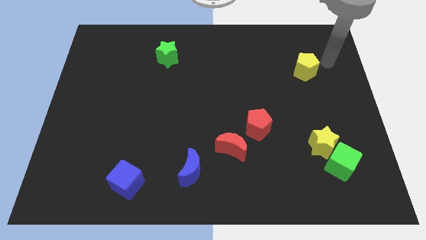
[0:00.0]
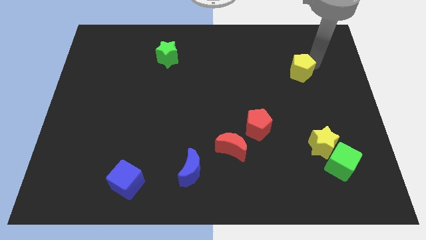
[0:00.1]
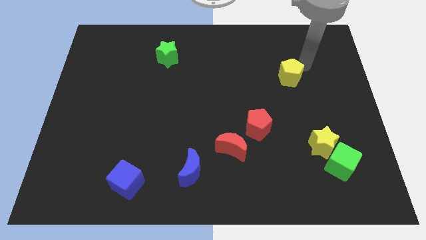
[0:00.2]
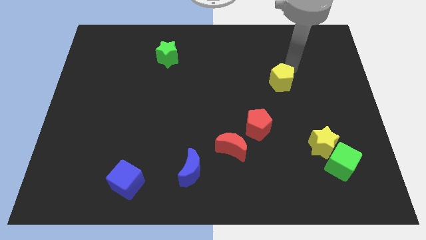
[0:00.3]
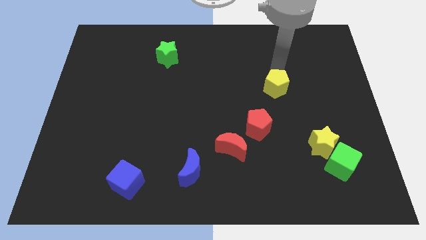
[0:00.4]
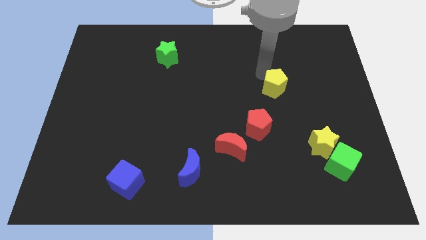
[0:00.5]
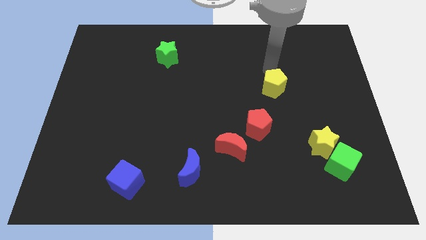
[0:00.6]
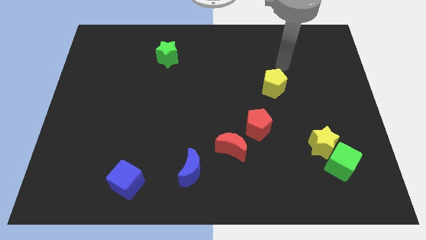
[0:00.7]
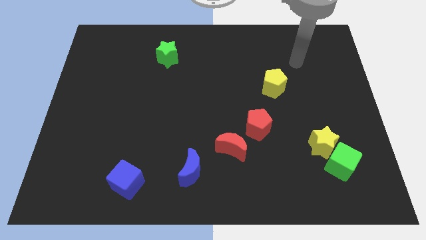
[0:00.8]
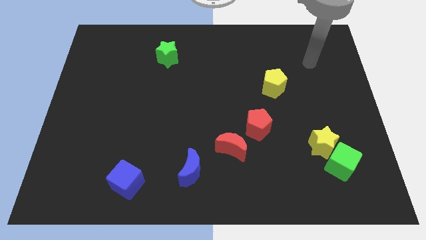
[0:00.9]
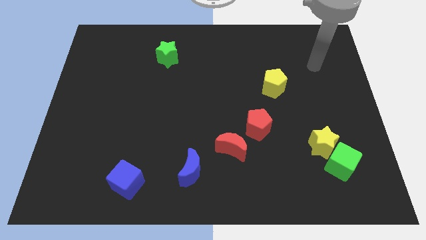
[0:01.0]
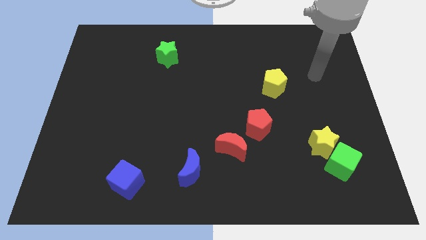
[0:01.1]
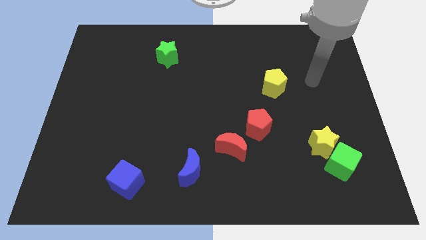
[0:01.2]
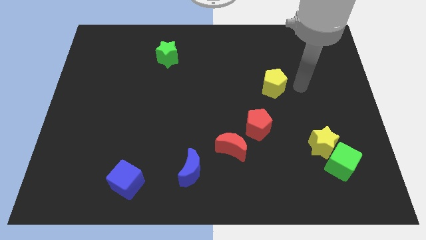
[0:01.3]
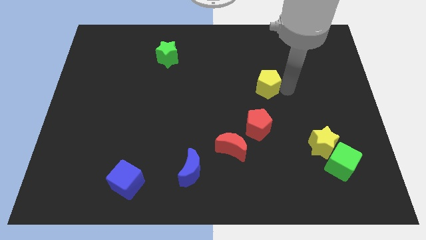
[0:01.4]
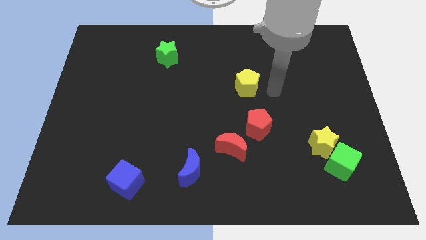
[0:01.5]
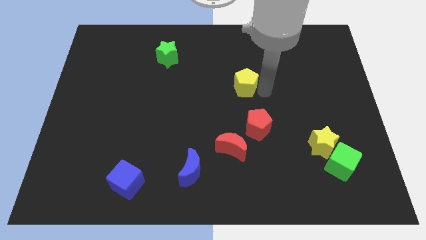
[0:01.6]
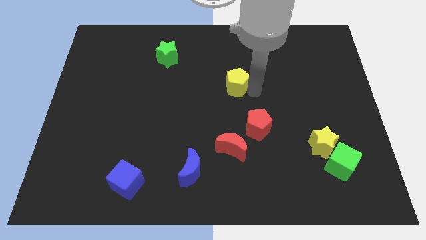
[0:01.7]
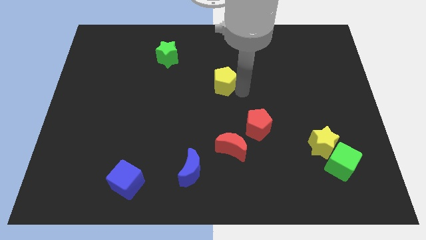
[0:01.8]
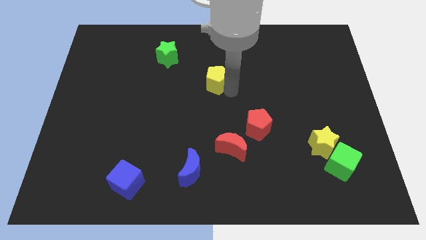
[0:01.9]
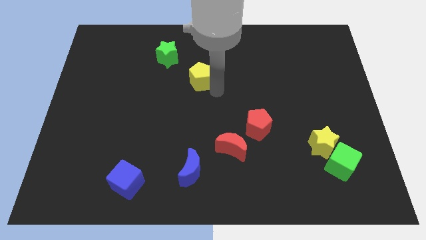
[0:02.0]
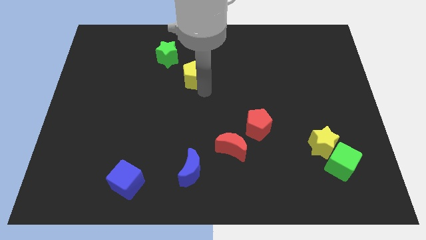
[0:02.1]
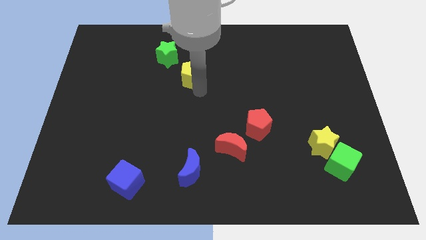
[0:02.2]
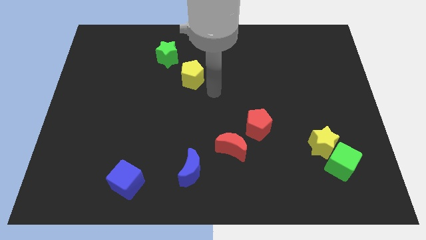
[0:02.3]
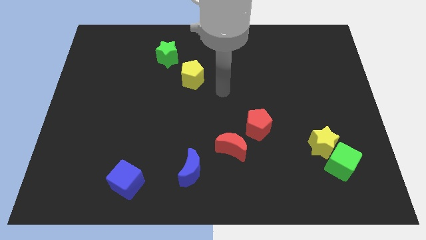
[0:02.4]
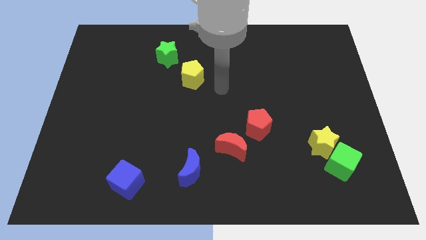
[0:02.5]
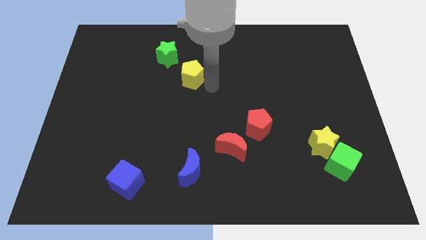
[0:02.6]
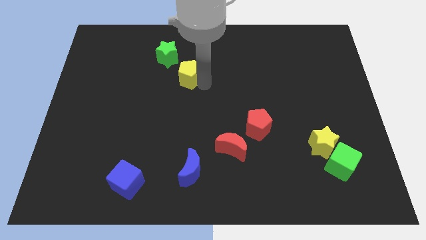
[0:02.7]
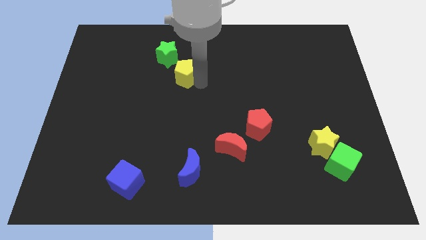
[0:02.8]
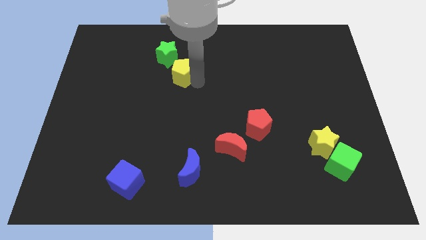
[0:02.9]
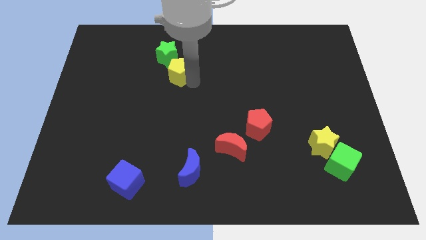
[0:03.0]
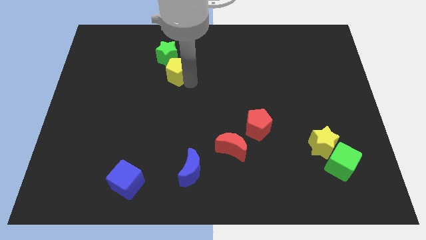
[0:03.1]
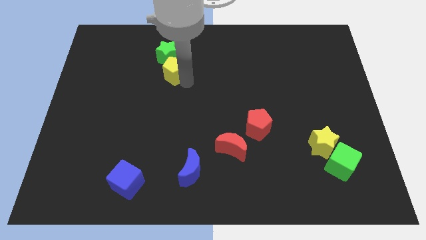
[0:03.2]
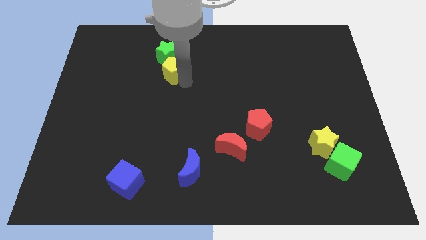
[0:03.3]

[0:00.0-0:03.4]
place the yellow pentagon diagonally below to the green star

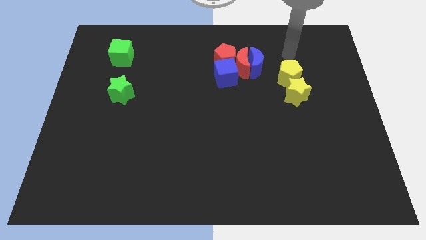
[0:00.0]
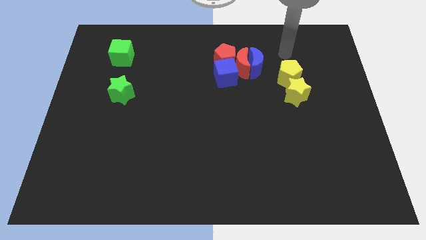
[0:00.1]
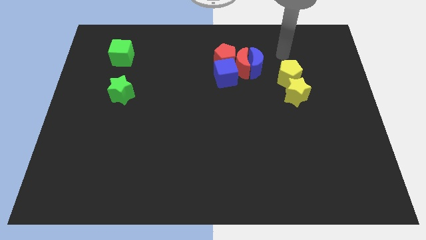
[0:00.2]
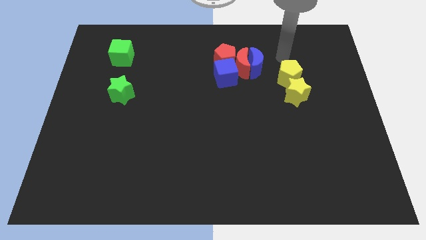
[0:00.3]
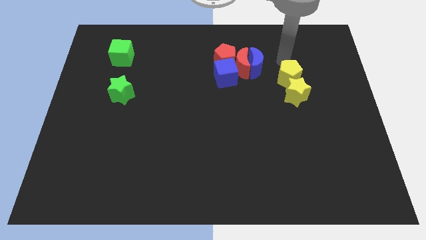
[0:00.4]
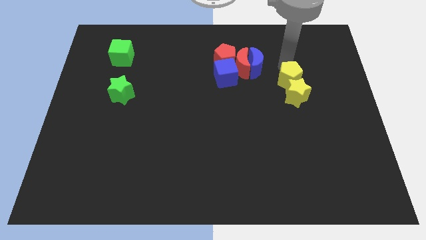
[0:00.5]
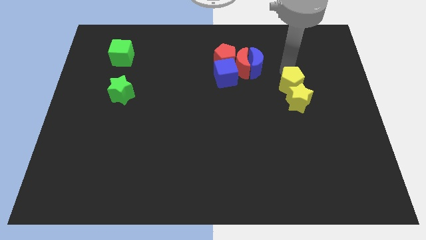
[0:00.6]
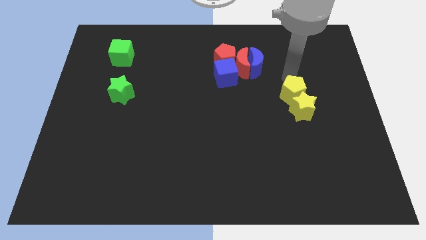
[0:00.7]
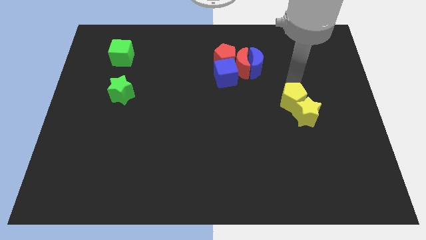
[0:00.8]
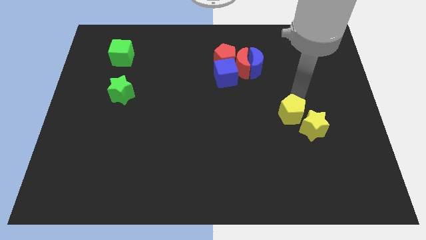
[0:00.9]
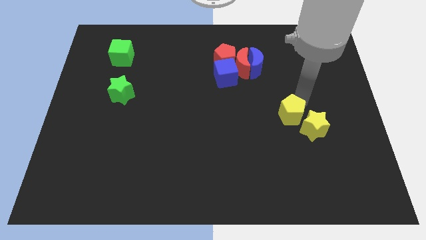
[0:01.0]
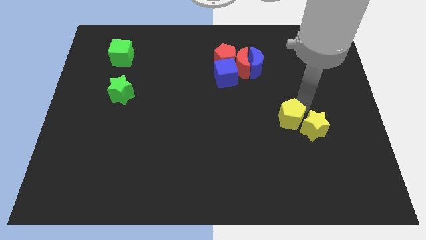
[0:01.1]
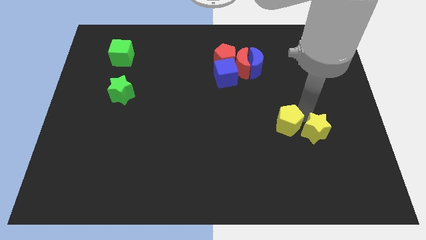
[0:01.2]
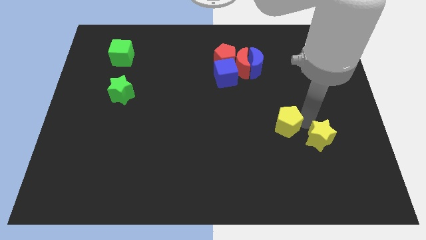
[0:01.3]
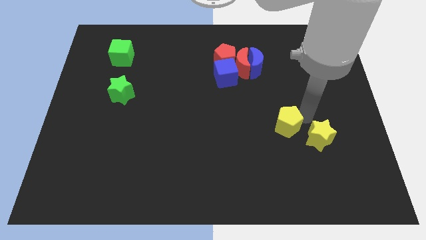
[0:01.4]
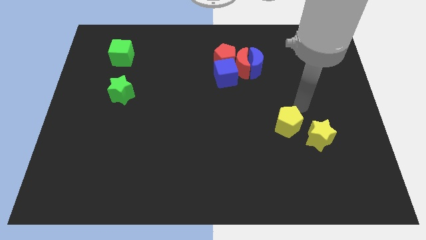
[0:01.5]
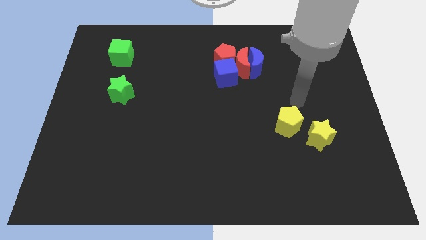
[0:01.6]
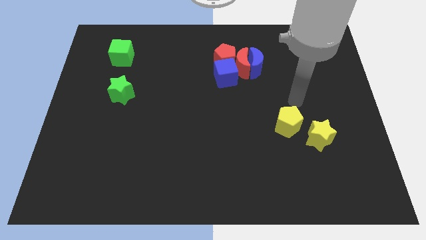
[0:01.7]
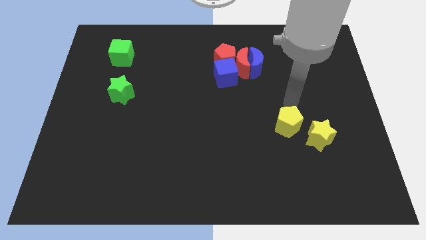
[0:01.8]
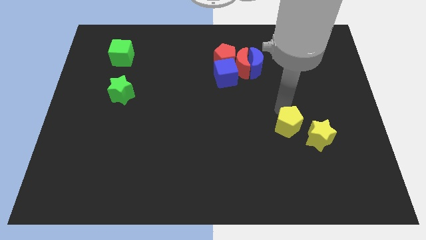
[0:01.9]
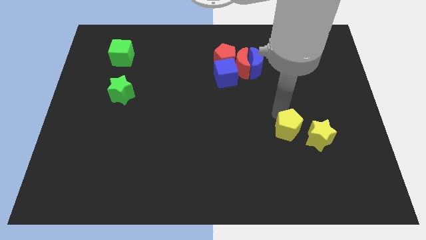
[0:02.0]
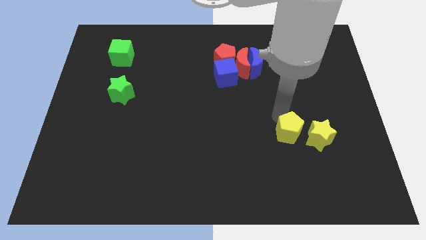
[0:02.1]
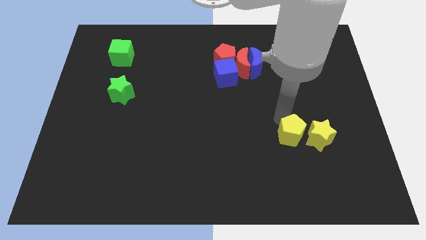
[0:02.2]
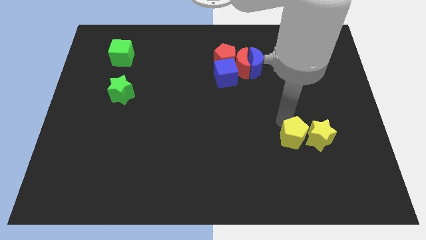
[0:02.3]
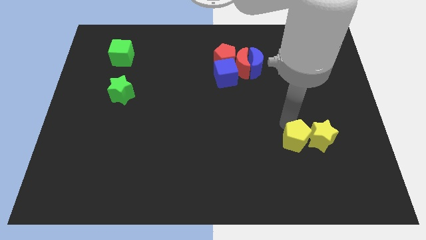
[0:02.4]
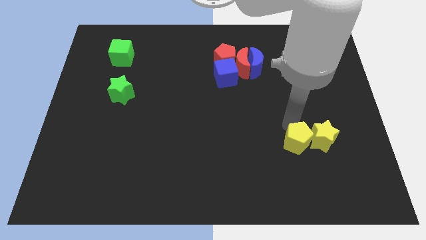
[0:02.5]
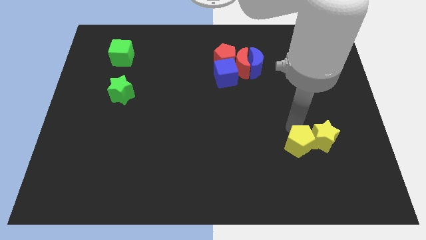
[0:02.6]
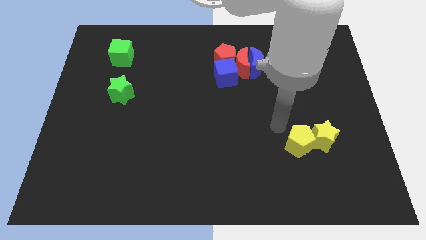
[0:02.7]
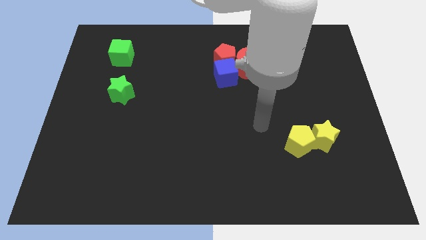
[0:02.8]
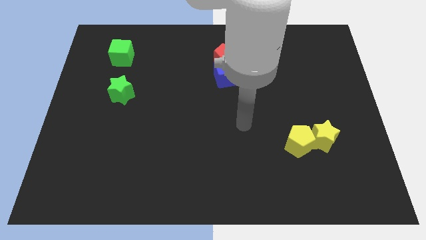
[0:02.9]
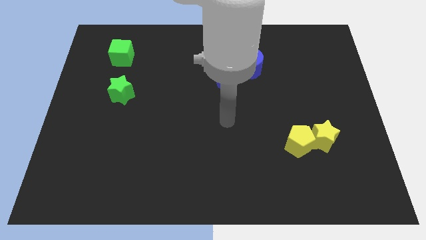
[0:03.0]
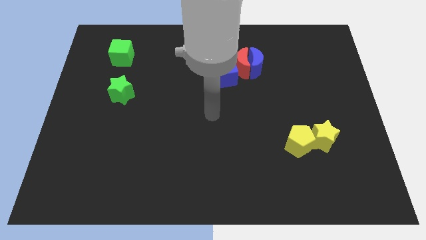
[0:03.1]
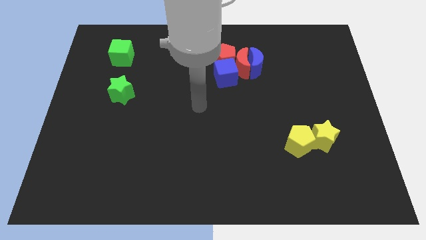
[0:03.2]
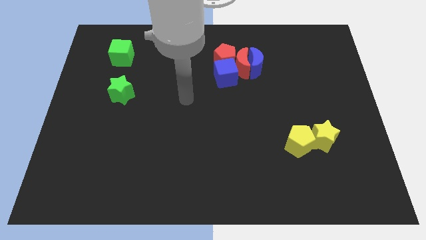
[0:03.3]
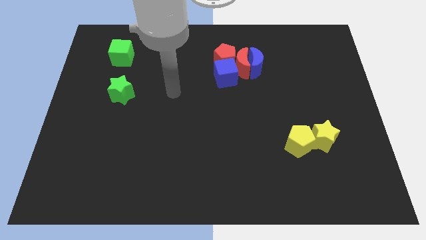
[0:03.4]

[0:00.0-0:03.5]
push both yellow pentagon and yellow star towards the right bottom of the board

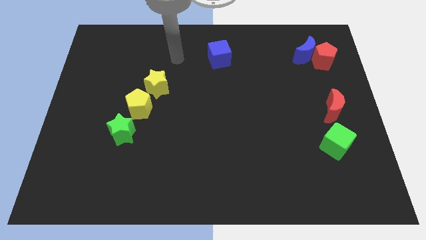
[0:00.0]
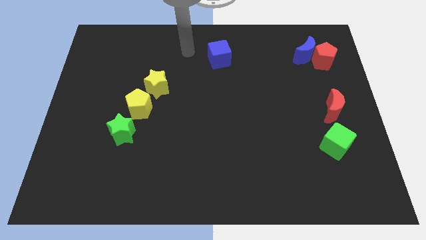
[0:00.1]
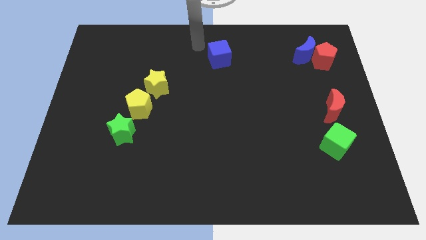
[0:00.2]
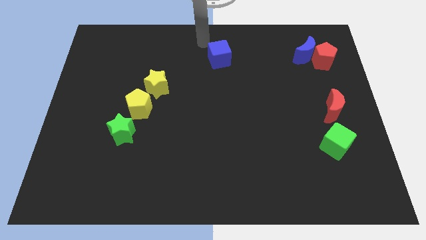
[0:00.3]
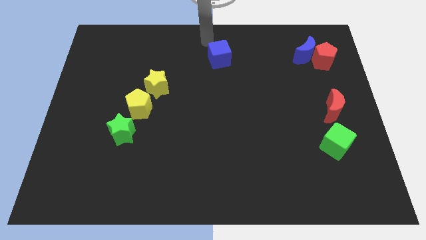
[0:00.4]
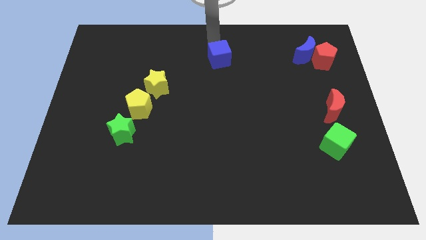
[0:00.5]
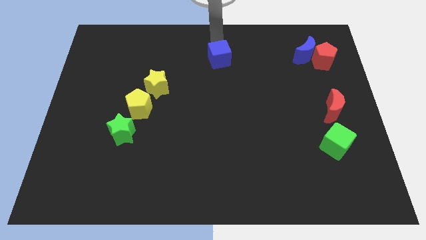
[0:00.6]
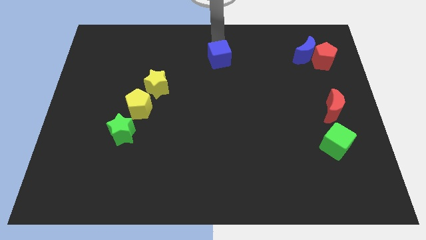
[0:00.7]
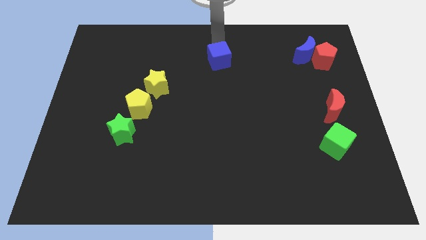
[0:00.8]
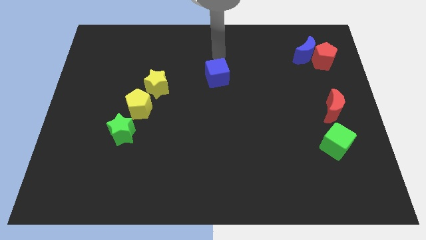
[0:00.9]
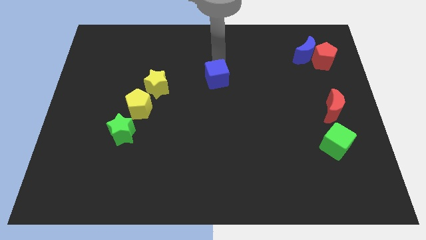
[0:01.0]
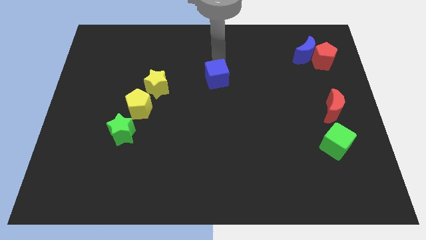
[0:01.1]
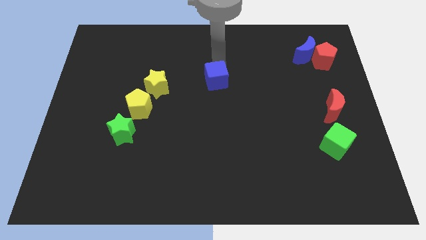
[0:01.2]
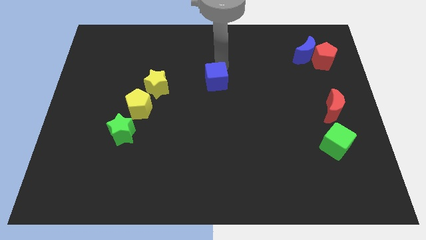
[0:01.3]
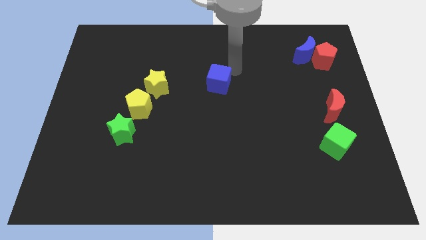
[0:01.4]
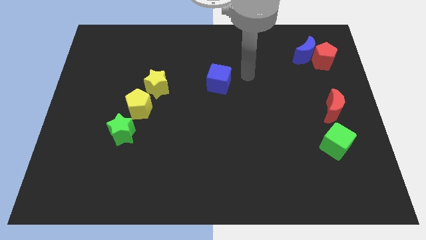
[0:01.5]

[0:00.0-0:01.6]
place the blue block horizontally to right side of the yellow star

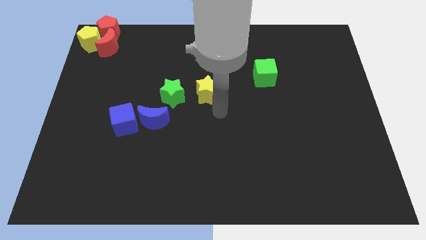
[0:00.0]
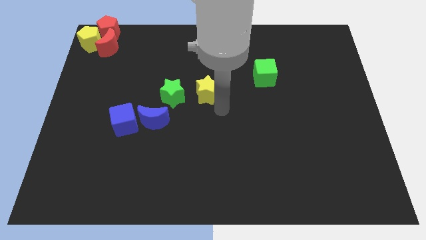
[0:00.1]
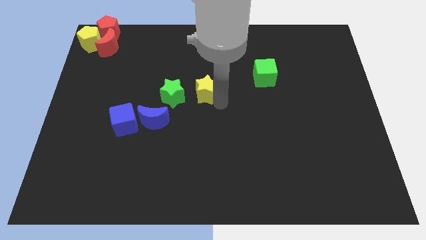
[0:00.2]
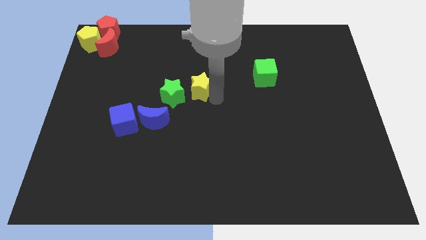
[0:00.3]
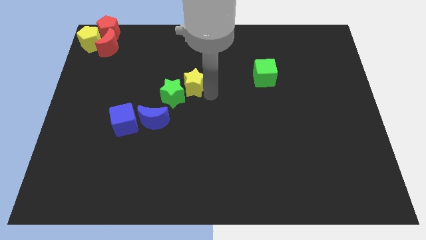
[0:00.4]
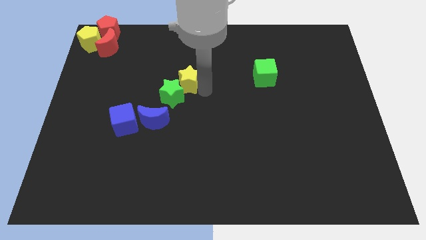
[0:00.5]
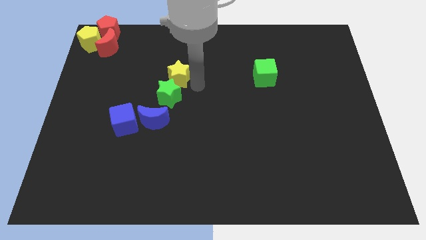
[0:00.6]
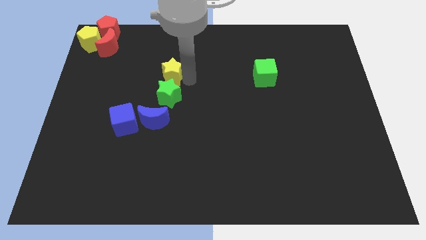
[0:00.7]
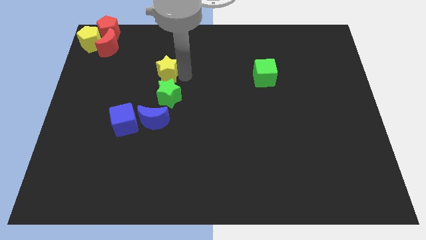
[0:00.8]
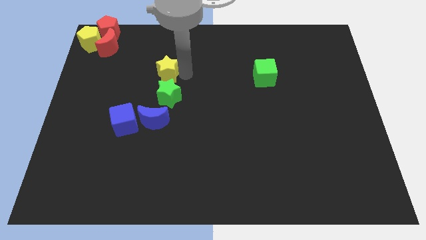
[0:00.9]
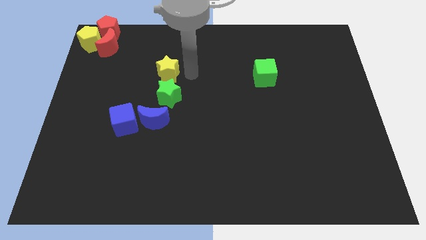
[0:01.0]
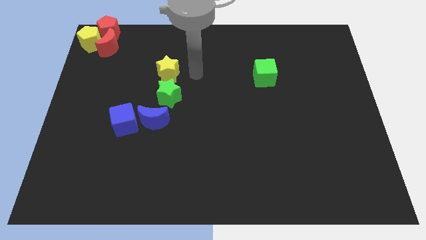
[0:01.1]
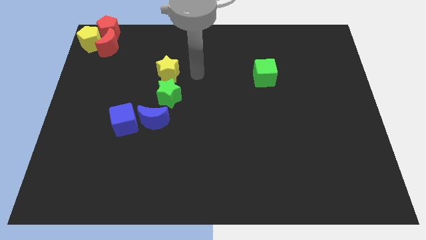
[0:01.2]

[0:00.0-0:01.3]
place the yellow star above the green star
